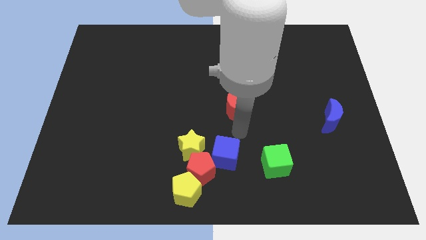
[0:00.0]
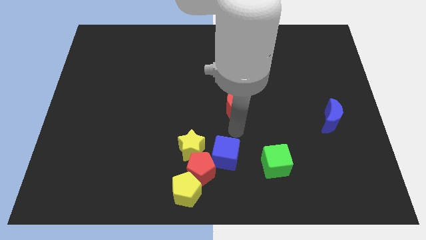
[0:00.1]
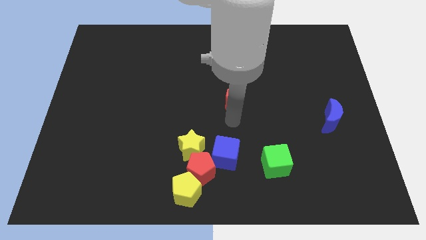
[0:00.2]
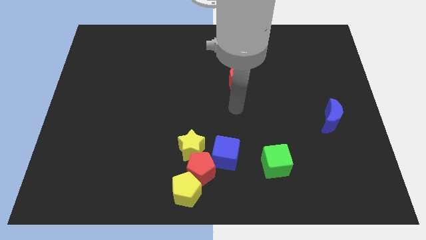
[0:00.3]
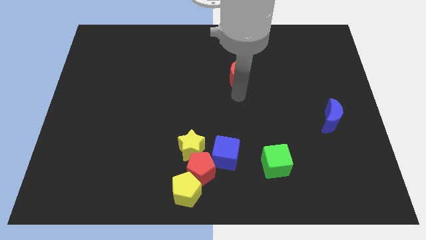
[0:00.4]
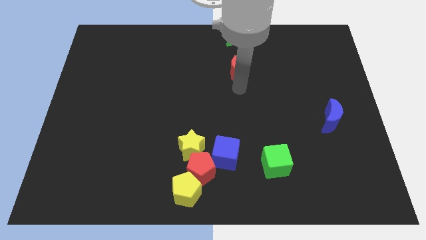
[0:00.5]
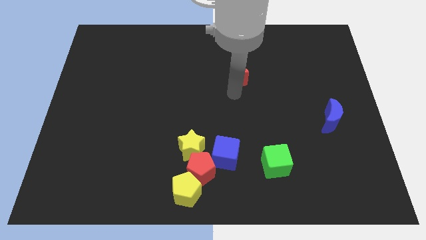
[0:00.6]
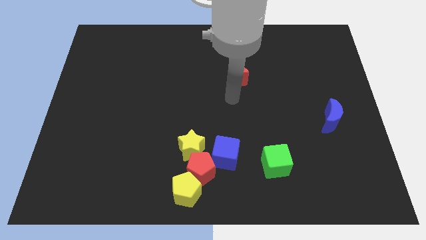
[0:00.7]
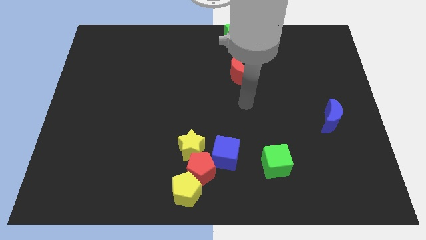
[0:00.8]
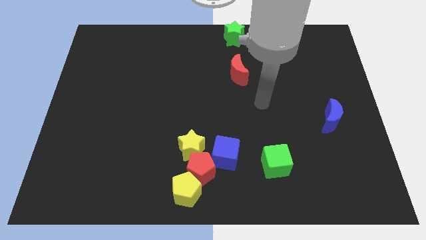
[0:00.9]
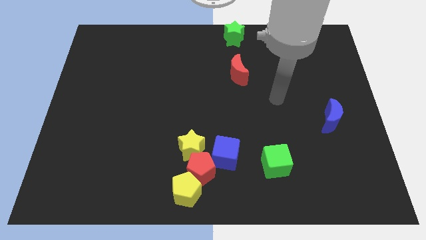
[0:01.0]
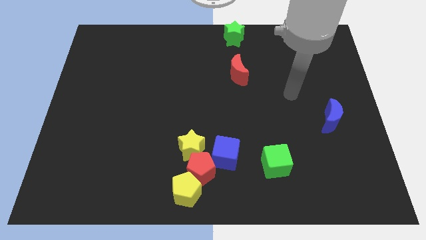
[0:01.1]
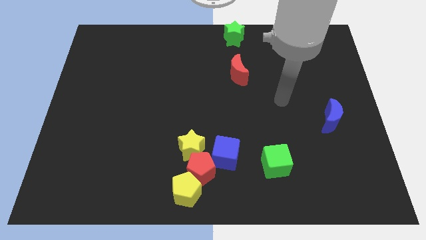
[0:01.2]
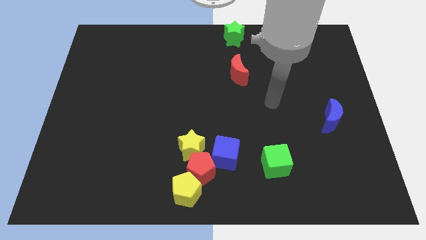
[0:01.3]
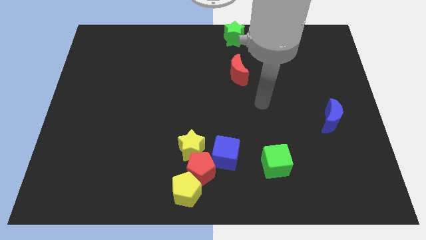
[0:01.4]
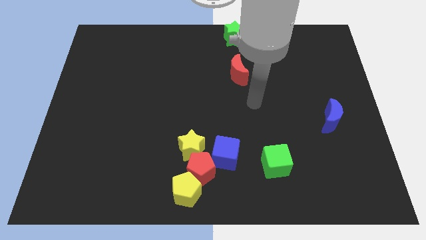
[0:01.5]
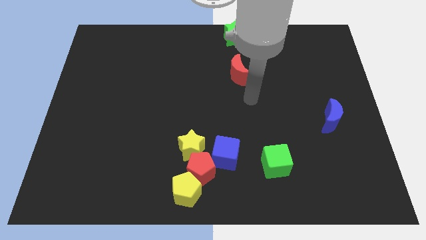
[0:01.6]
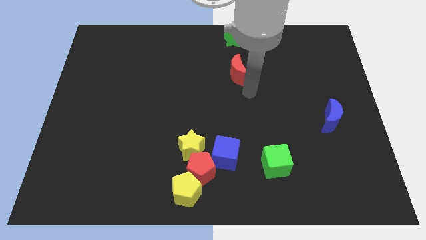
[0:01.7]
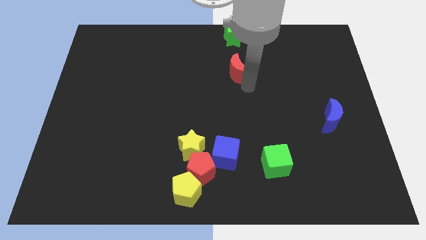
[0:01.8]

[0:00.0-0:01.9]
push the red crescent upwards

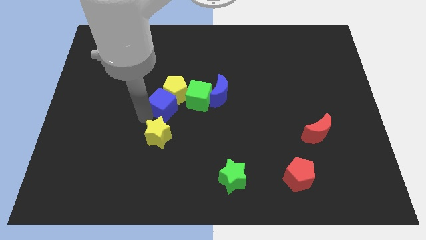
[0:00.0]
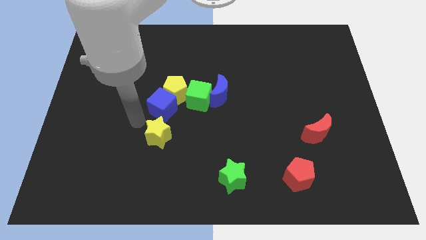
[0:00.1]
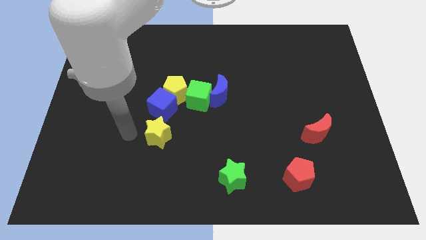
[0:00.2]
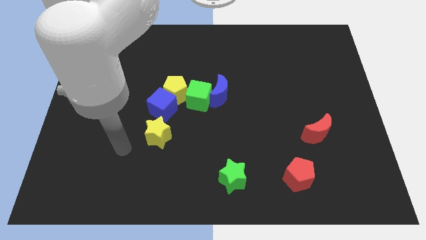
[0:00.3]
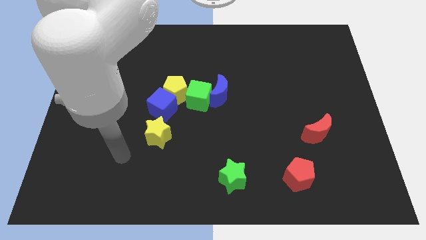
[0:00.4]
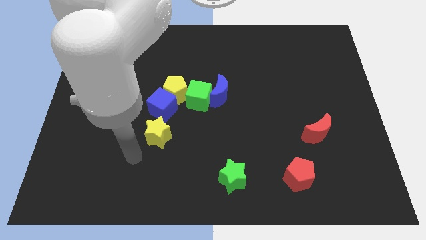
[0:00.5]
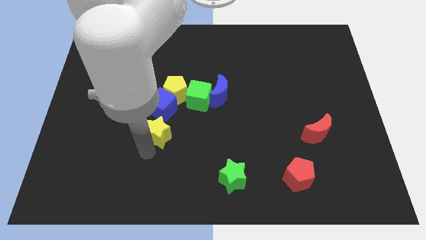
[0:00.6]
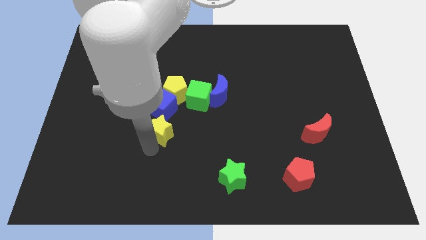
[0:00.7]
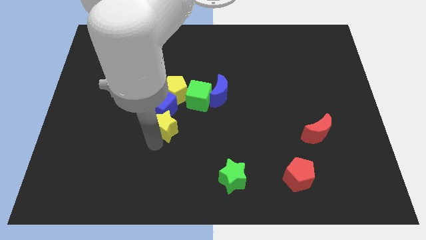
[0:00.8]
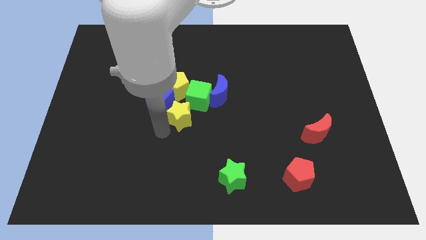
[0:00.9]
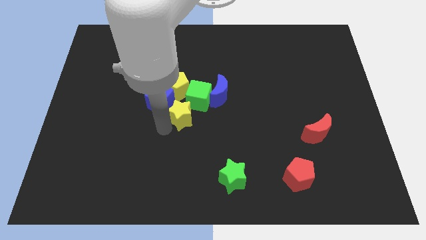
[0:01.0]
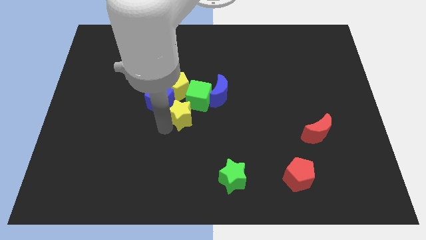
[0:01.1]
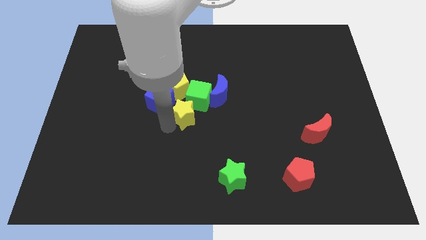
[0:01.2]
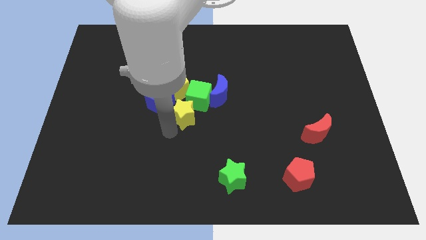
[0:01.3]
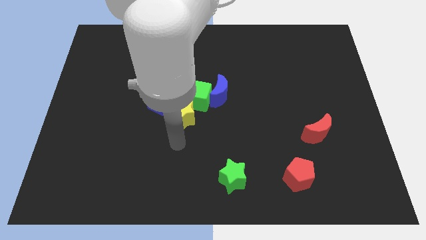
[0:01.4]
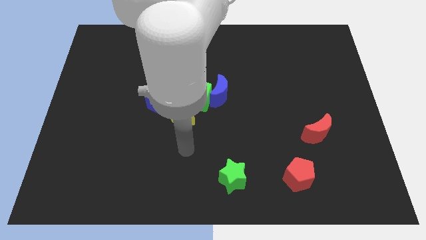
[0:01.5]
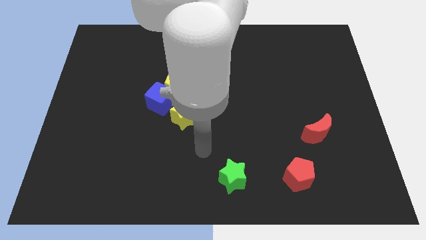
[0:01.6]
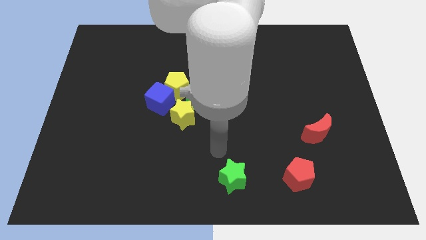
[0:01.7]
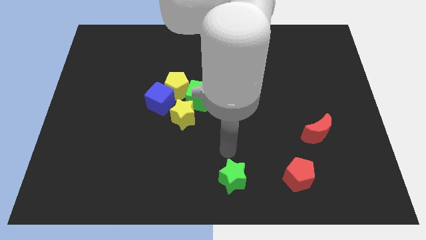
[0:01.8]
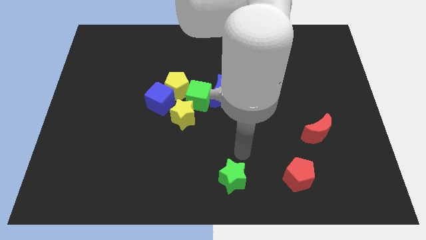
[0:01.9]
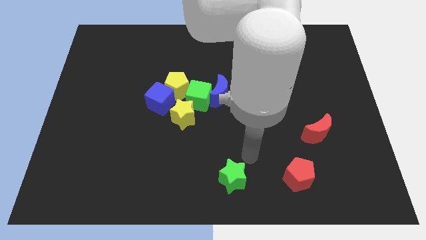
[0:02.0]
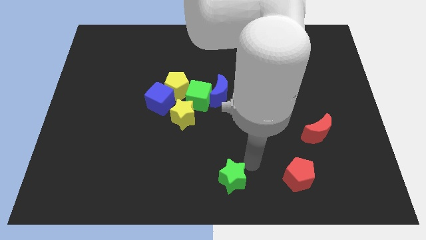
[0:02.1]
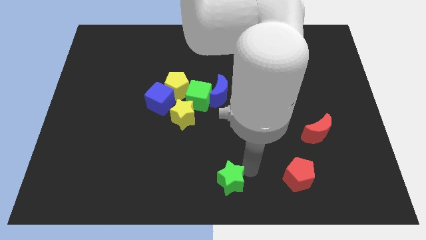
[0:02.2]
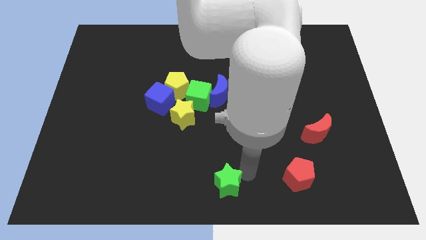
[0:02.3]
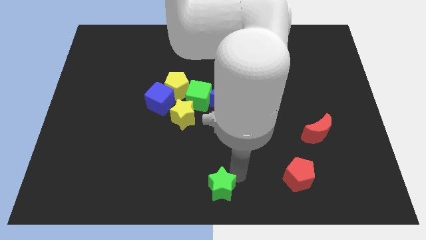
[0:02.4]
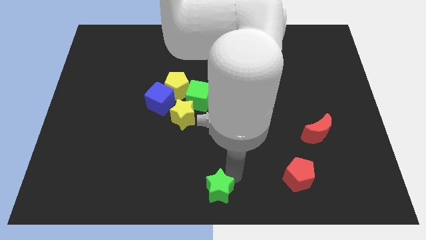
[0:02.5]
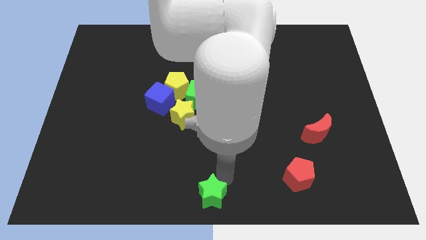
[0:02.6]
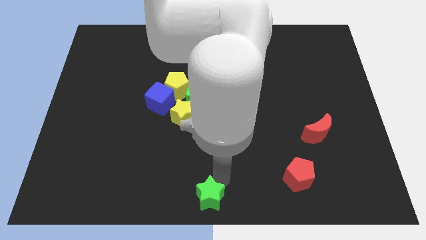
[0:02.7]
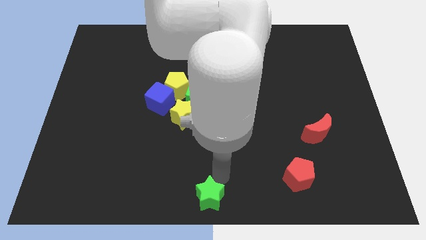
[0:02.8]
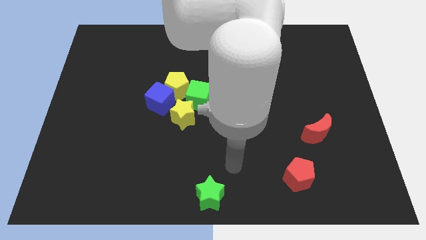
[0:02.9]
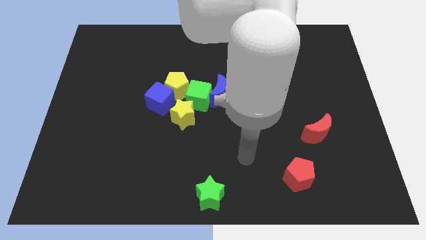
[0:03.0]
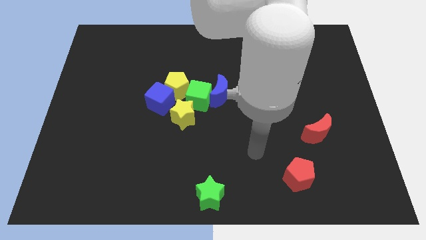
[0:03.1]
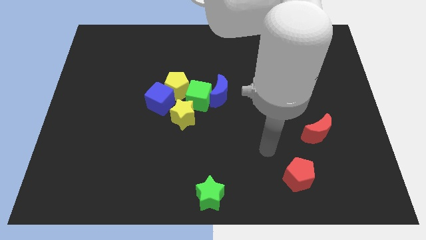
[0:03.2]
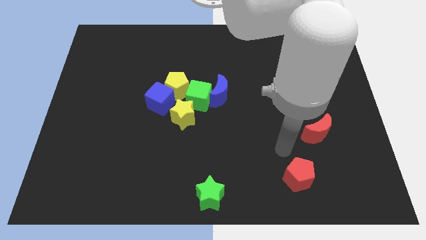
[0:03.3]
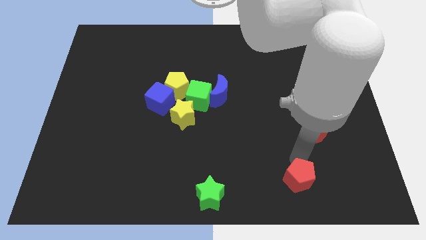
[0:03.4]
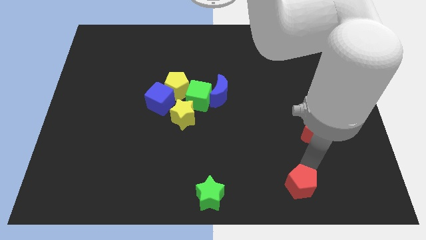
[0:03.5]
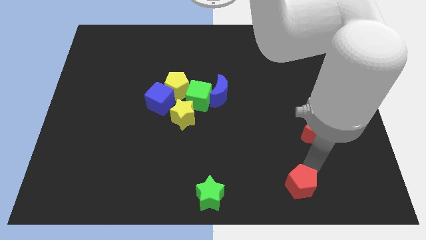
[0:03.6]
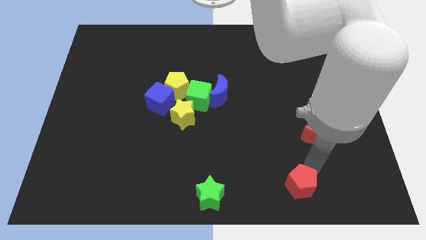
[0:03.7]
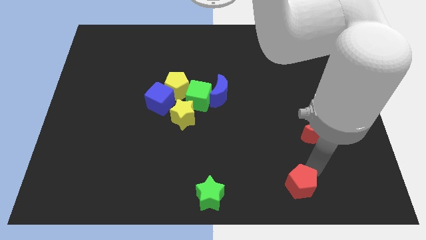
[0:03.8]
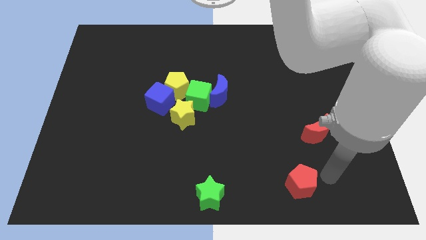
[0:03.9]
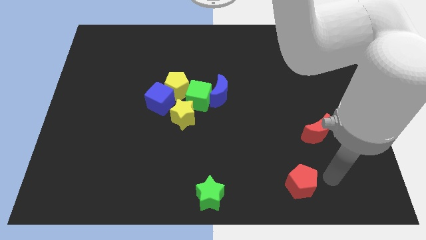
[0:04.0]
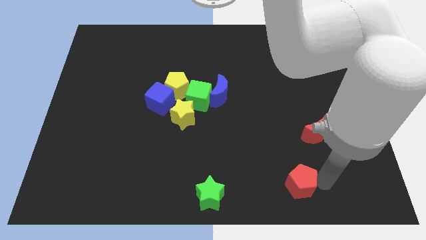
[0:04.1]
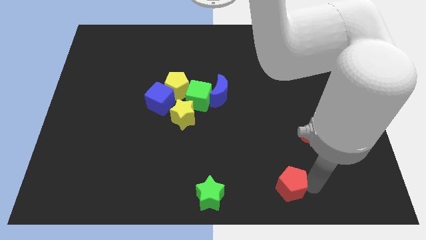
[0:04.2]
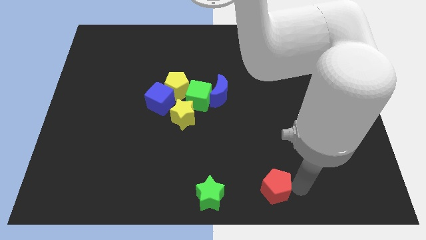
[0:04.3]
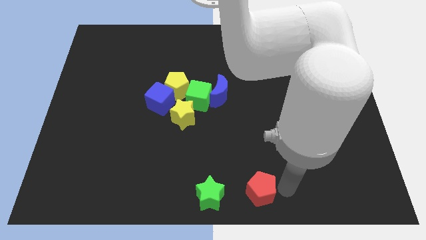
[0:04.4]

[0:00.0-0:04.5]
slide the green star vertically below the group of blocks

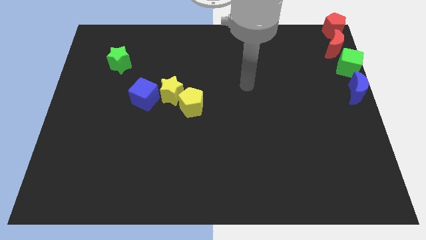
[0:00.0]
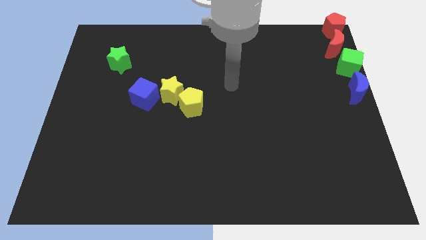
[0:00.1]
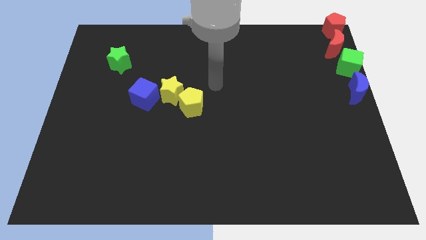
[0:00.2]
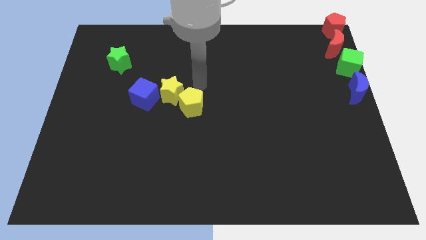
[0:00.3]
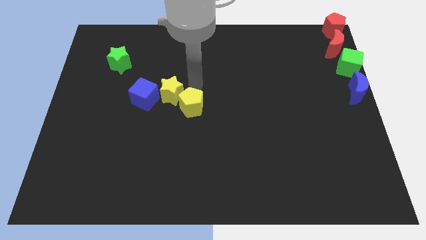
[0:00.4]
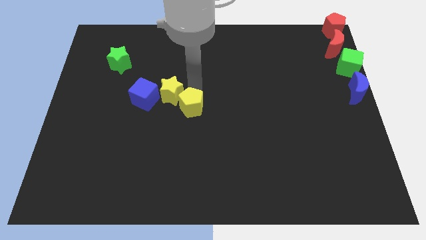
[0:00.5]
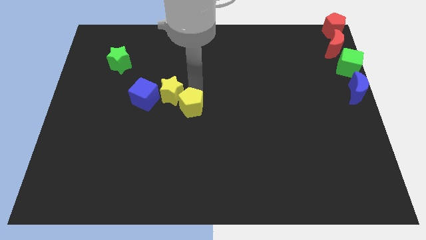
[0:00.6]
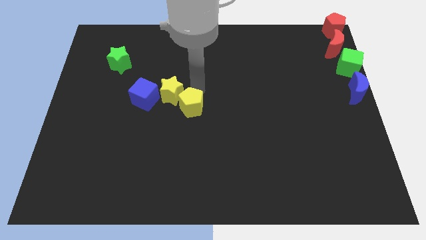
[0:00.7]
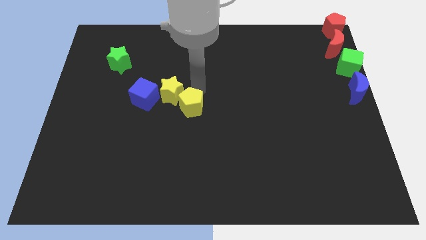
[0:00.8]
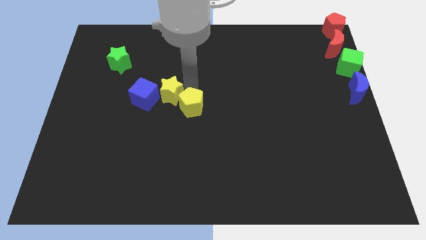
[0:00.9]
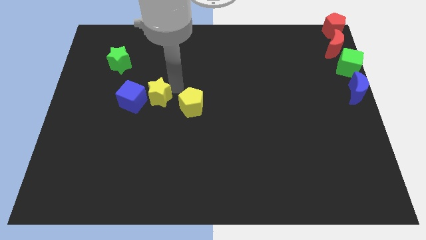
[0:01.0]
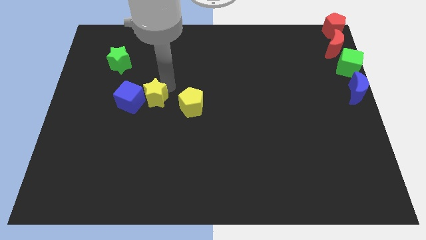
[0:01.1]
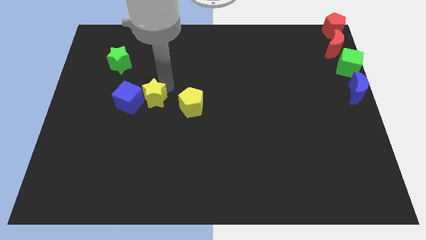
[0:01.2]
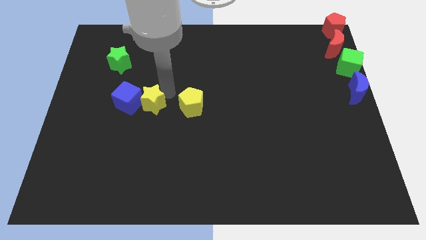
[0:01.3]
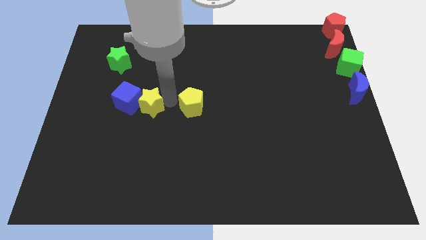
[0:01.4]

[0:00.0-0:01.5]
push the yellow star into the blue cube

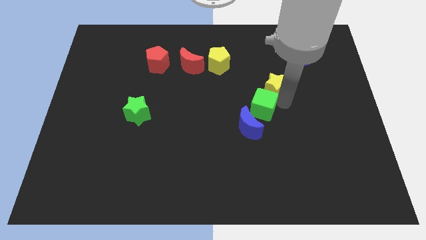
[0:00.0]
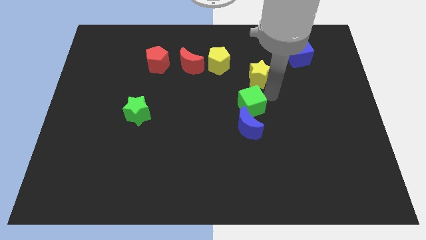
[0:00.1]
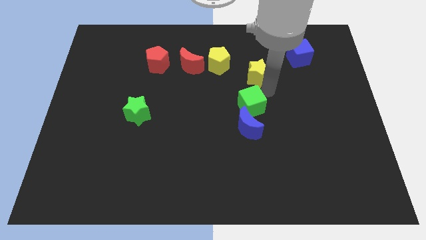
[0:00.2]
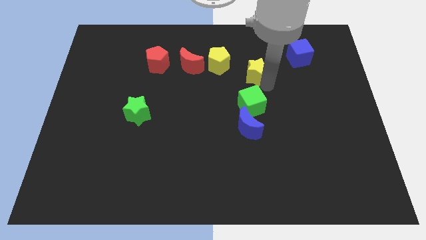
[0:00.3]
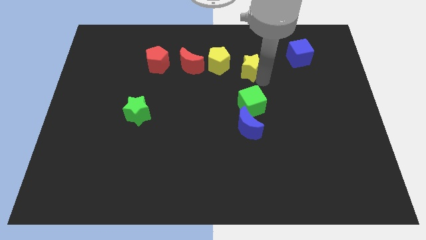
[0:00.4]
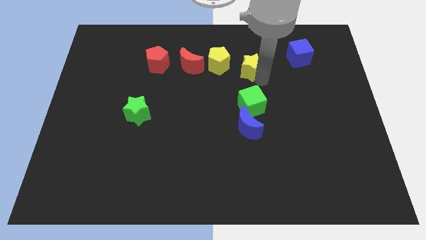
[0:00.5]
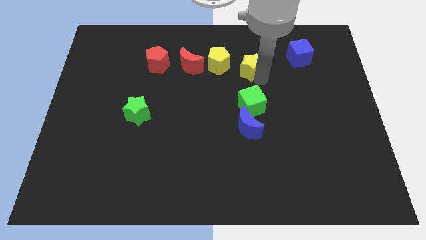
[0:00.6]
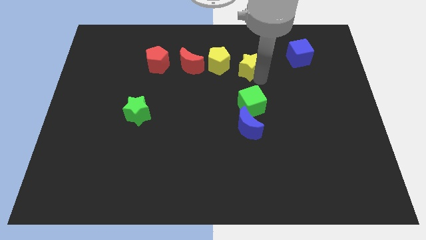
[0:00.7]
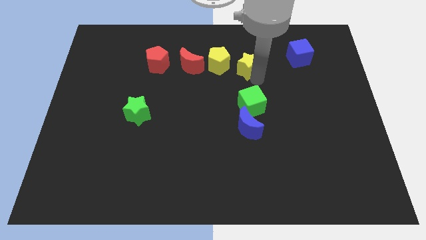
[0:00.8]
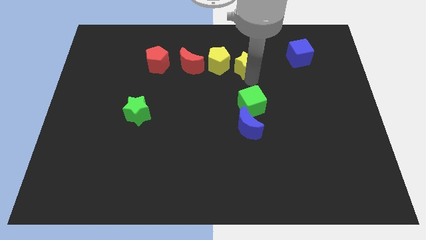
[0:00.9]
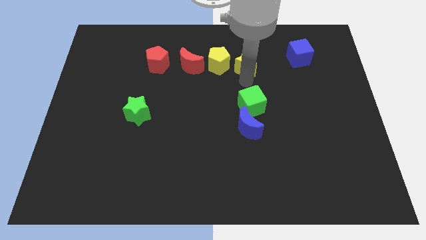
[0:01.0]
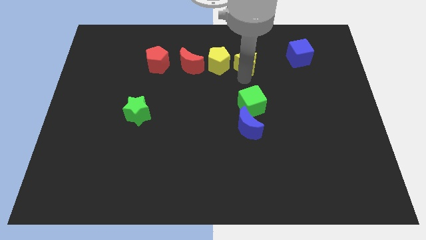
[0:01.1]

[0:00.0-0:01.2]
put the yellow star parallel right to the yellow pentagon
